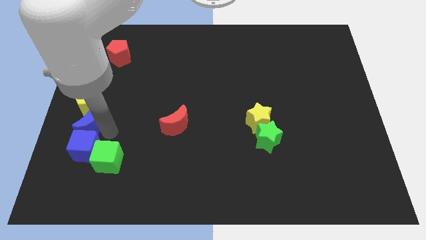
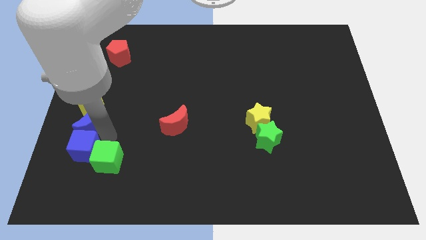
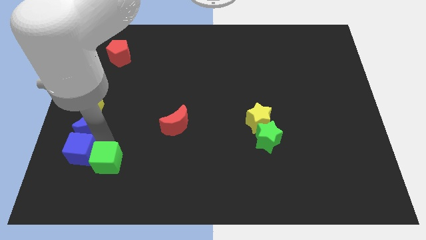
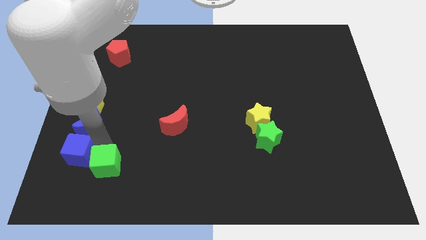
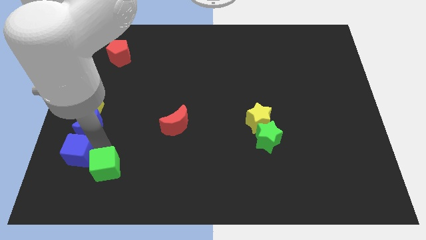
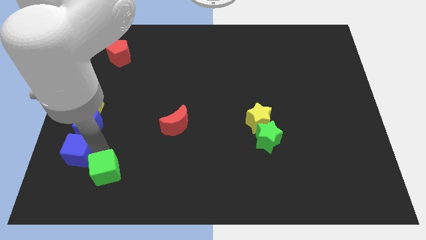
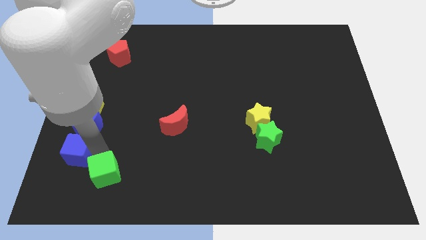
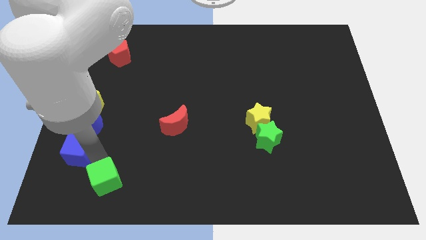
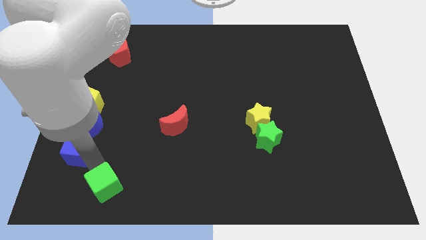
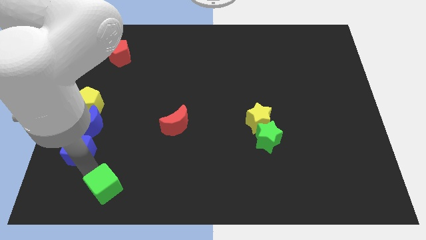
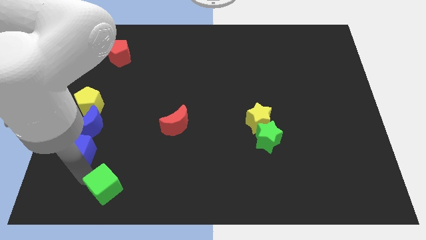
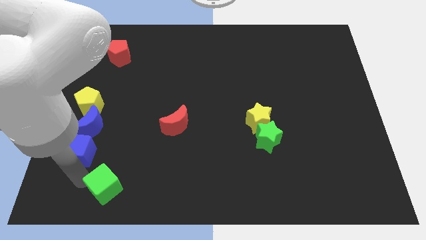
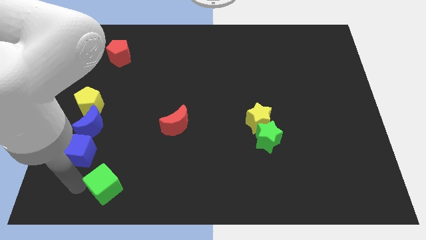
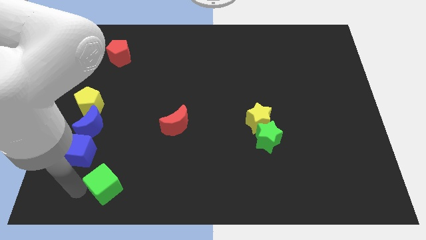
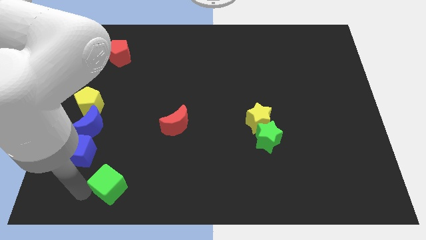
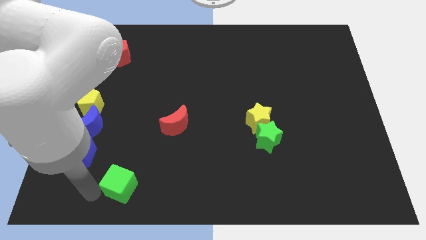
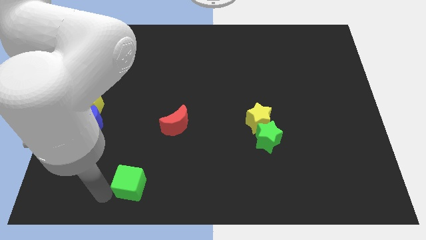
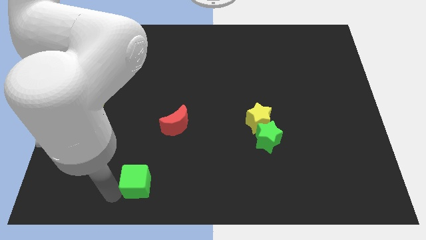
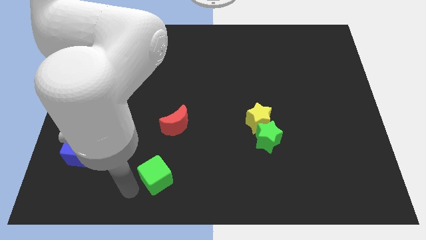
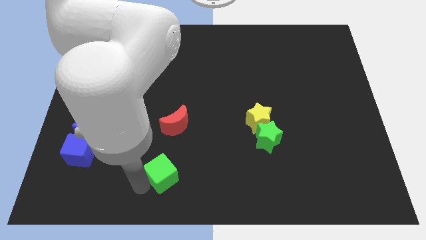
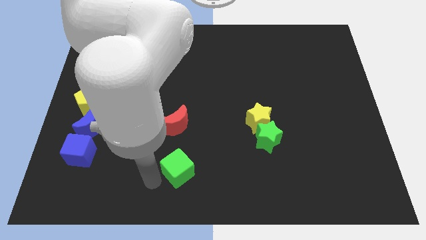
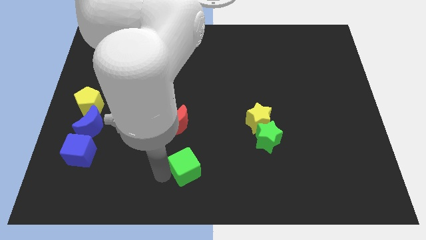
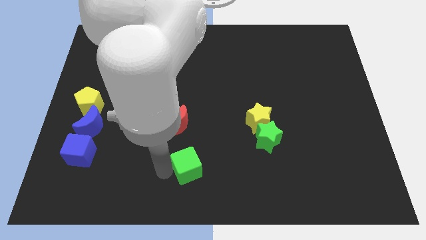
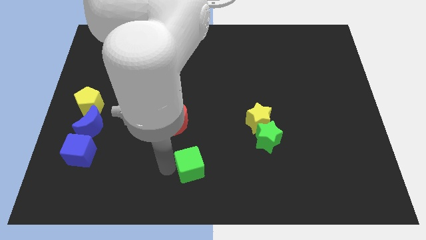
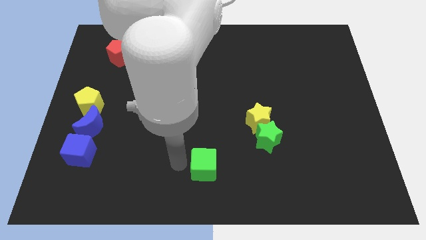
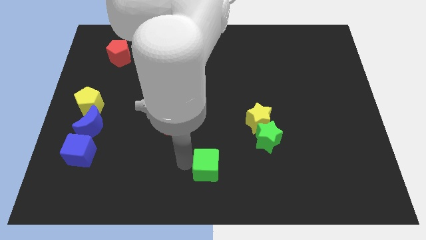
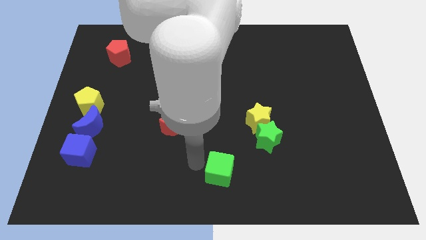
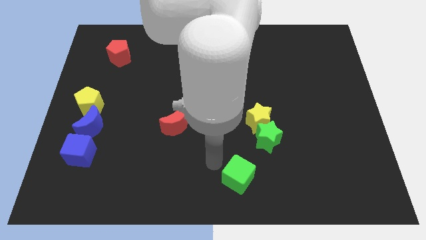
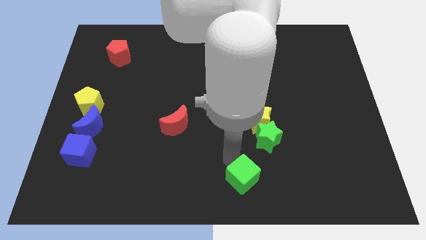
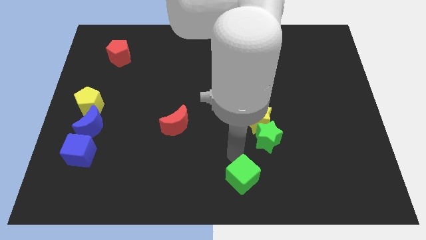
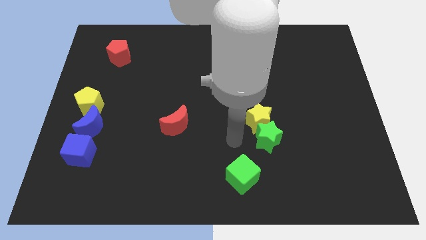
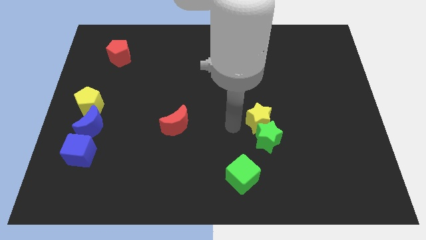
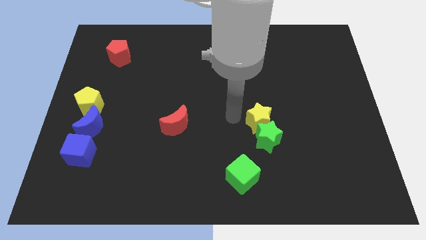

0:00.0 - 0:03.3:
push green cube to the bottom of the yellow star

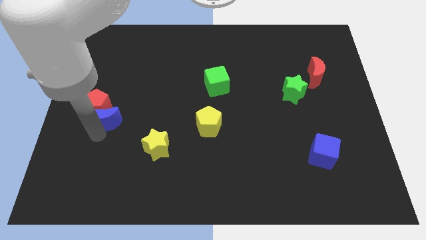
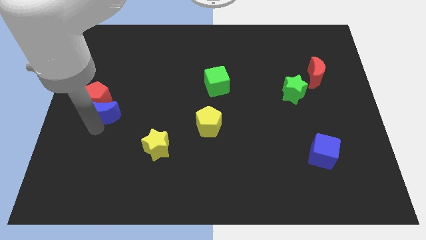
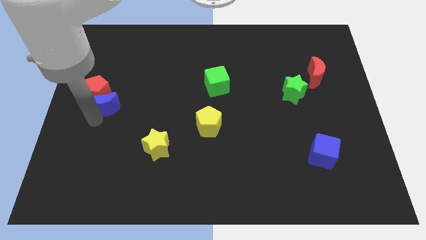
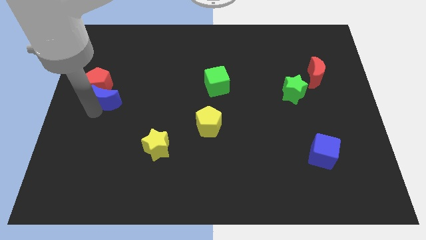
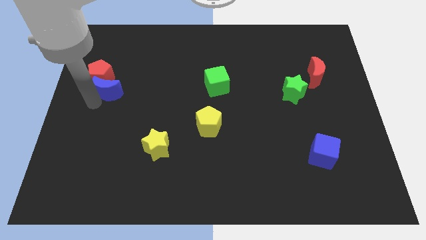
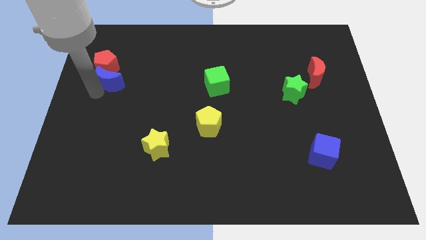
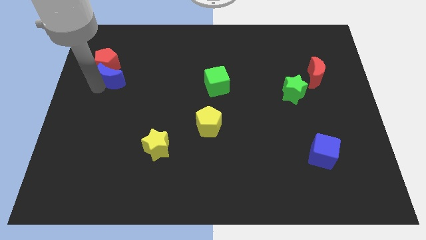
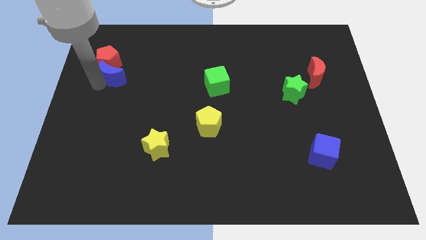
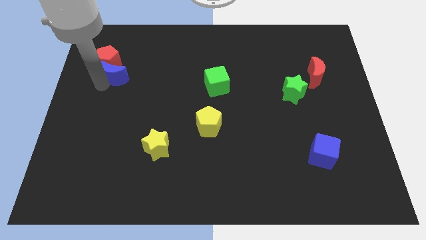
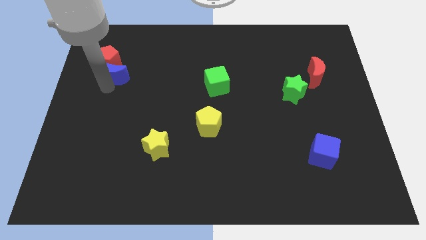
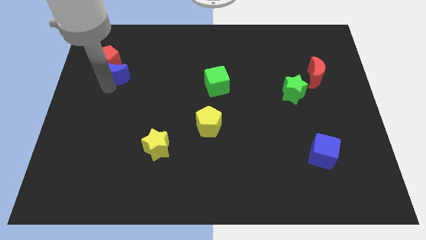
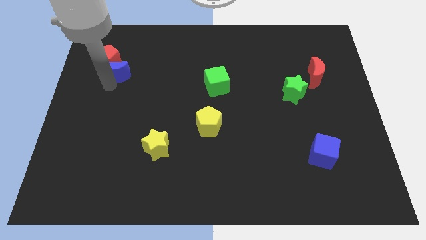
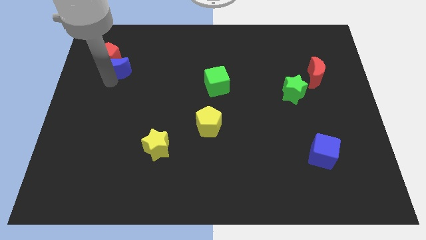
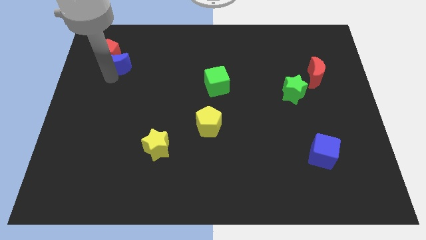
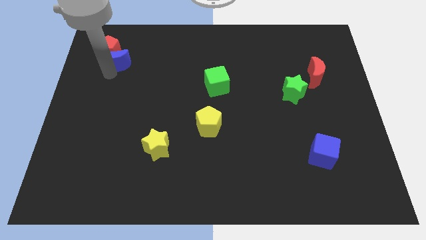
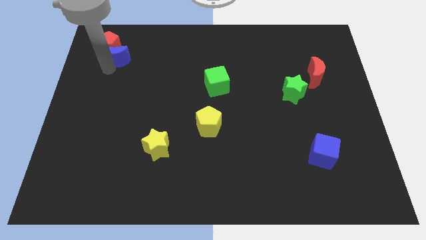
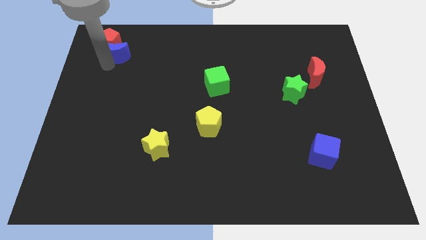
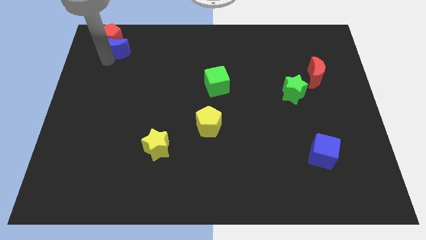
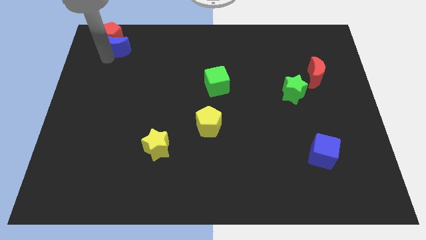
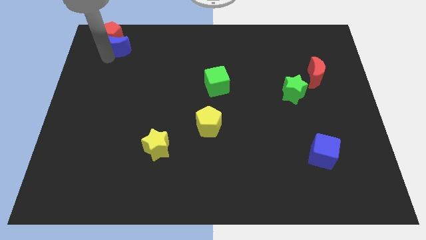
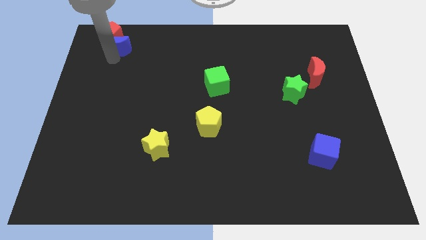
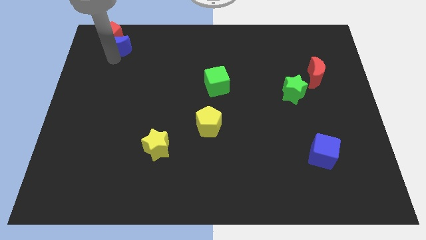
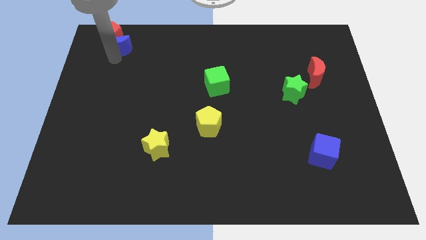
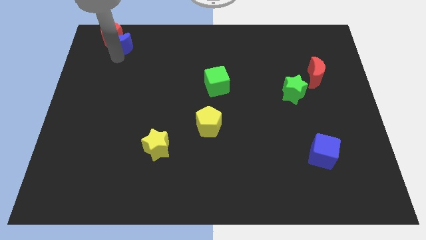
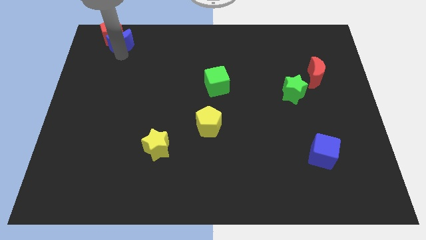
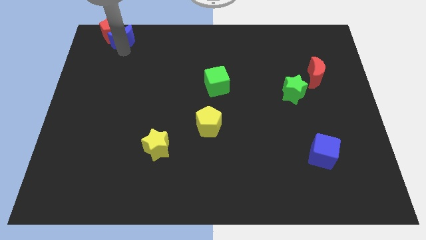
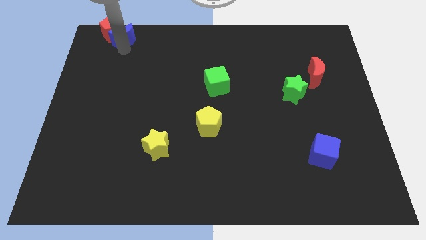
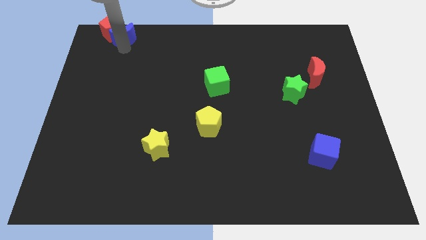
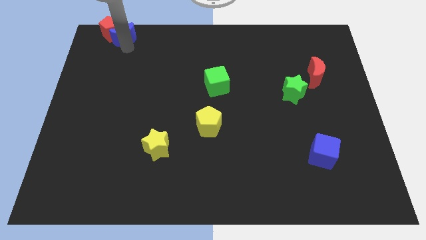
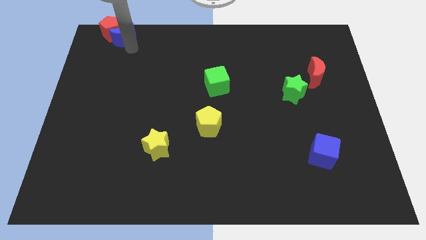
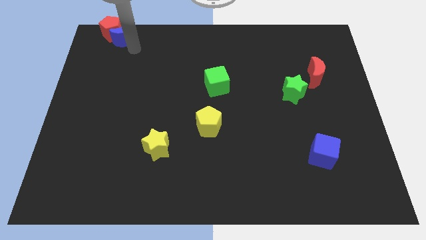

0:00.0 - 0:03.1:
place the red pentagon and blue crescent at the top left of the board

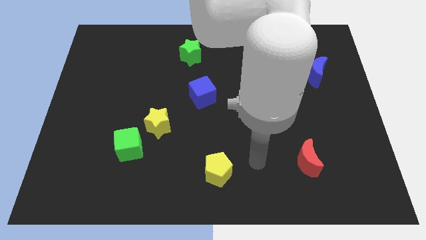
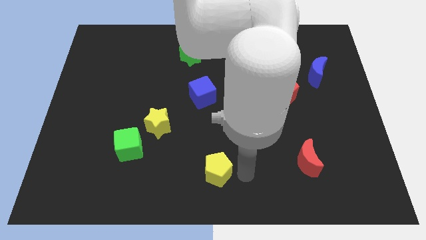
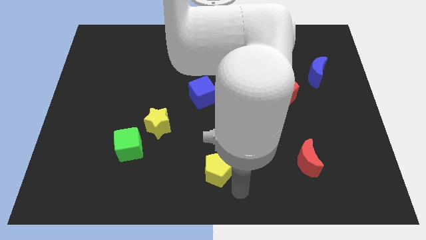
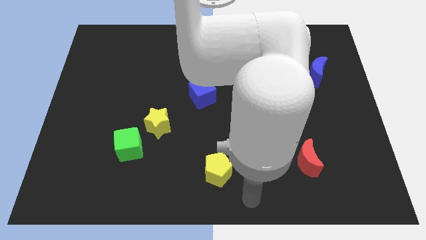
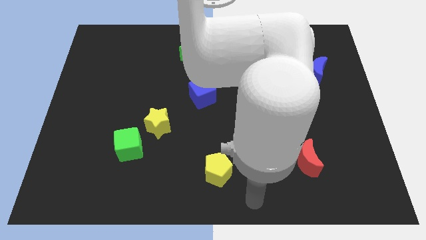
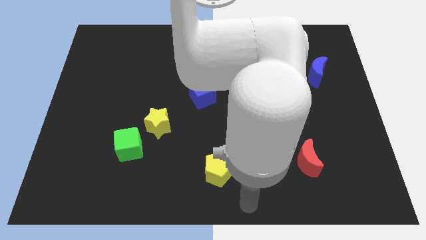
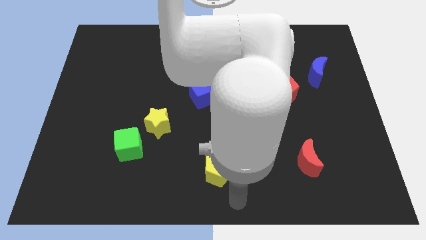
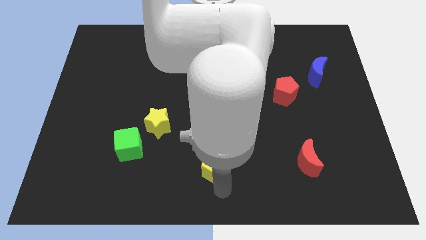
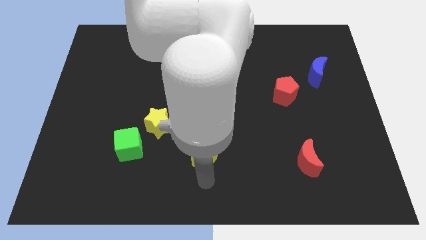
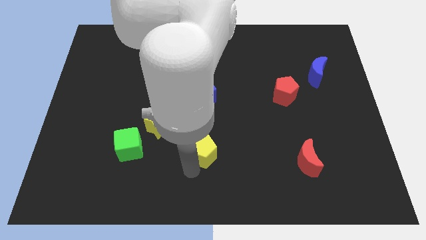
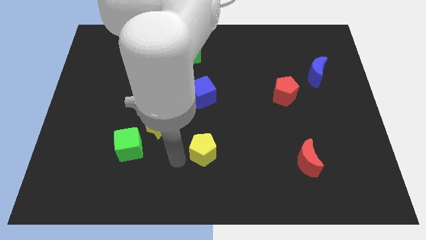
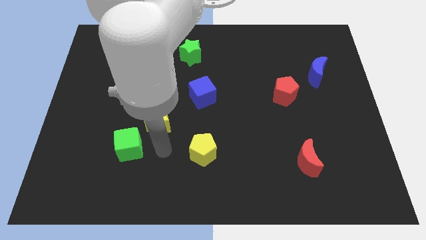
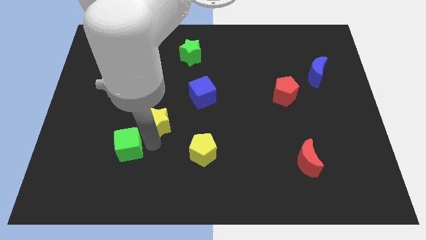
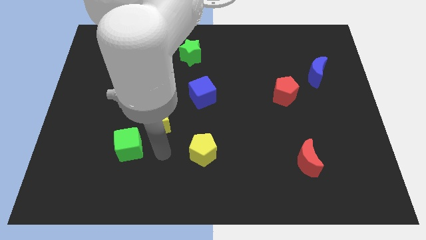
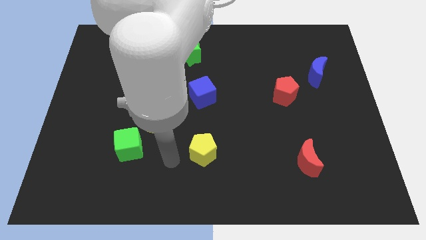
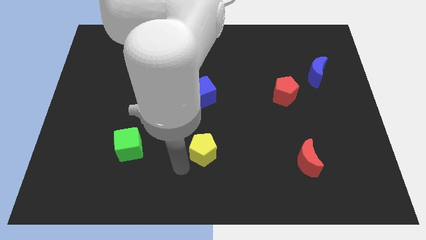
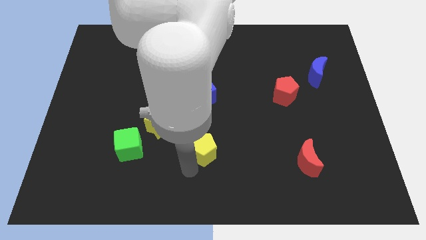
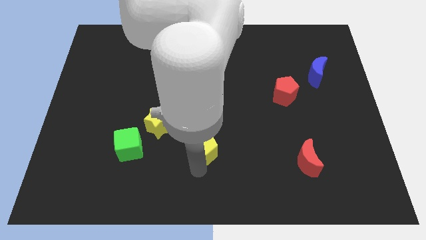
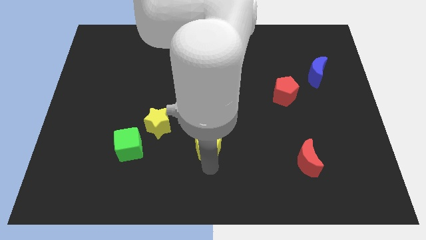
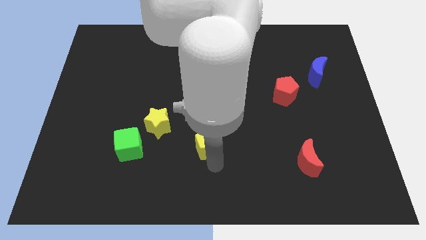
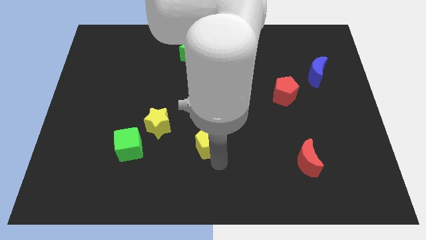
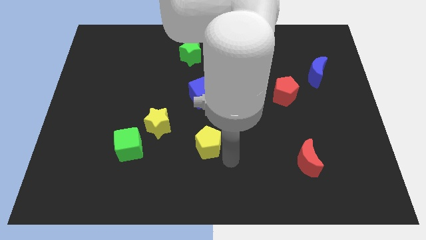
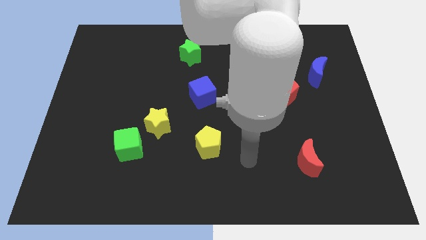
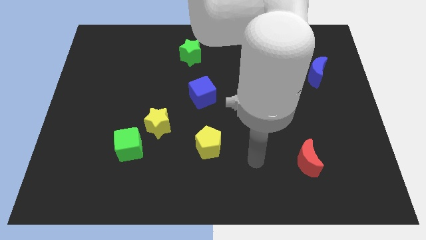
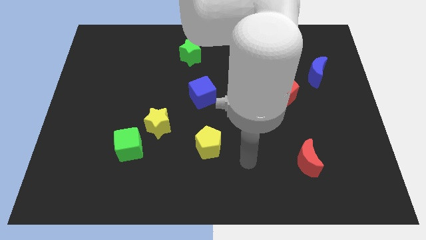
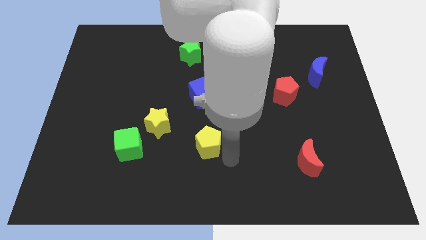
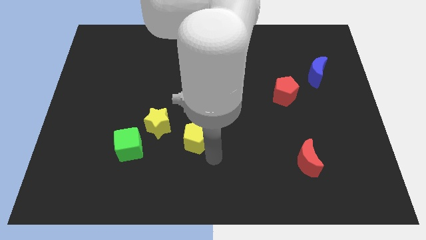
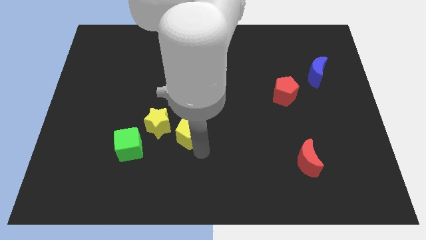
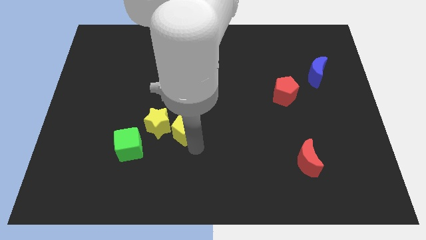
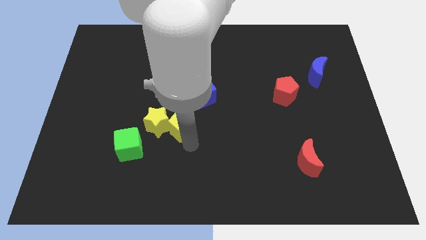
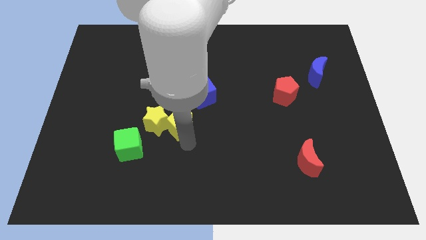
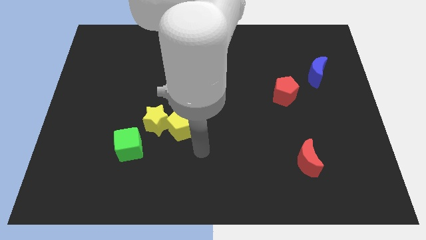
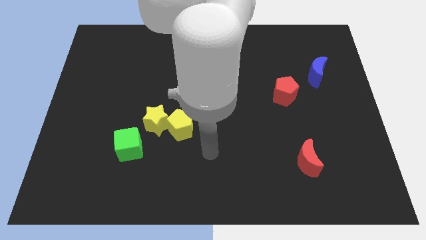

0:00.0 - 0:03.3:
move the yellow pentagon towards the right side of the yellow star
